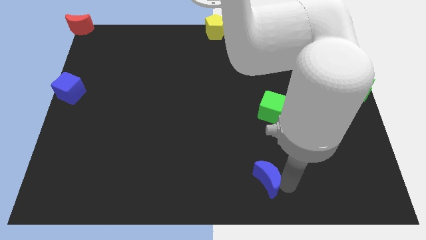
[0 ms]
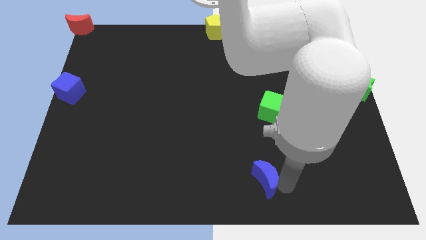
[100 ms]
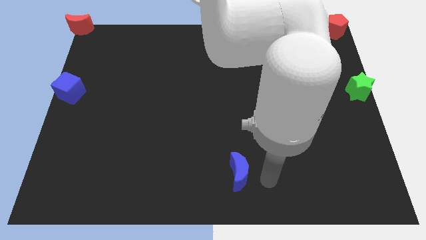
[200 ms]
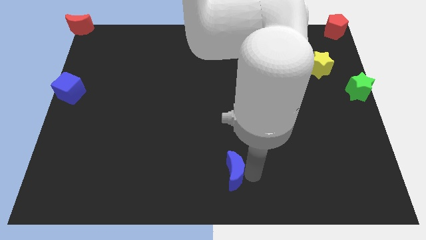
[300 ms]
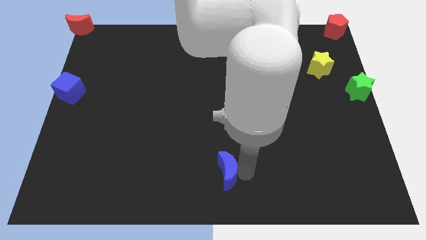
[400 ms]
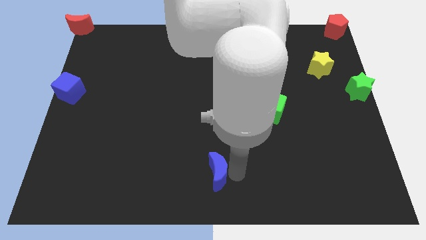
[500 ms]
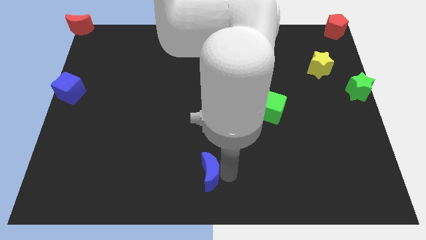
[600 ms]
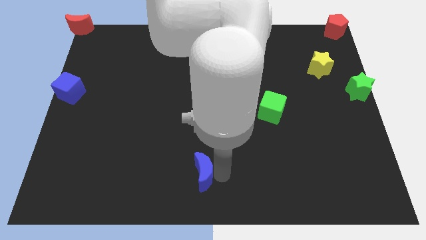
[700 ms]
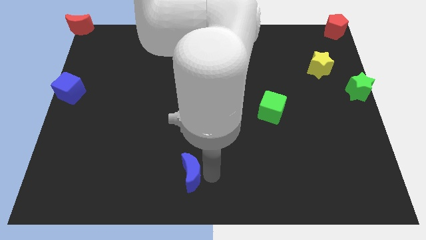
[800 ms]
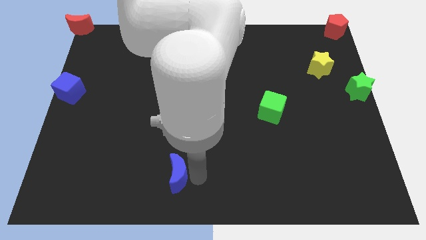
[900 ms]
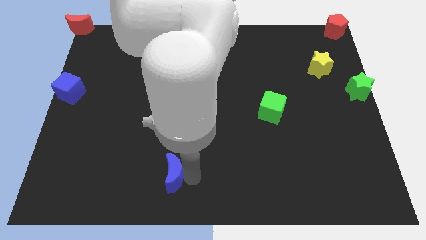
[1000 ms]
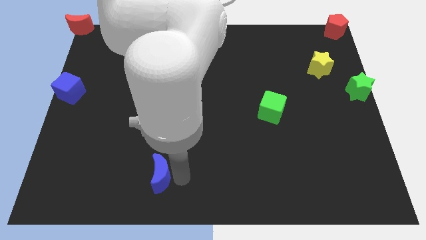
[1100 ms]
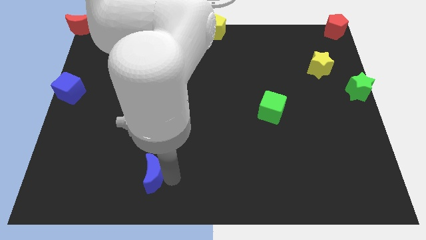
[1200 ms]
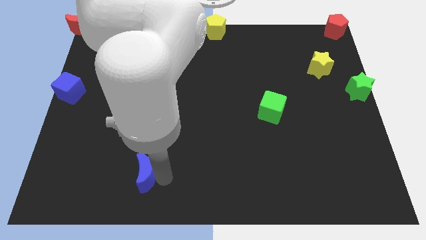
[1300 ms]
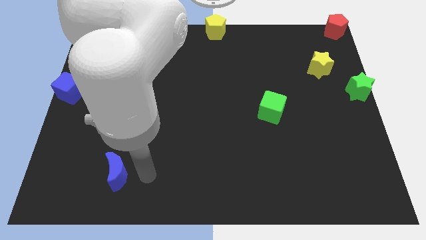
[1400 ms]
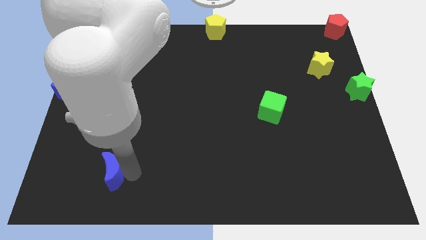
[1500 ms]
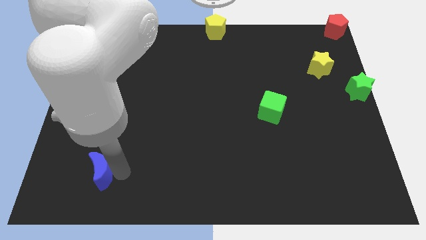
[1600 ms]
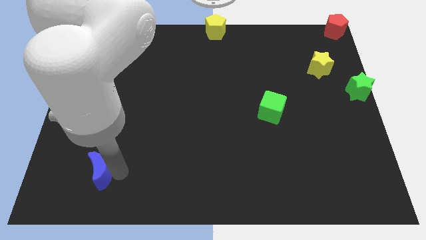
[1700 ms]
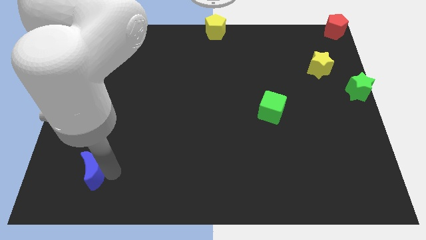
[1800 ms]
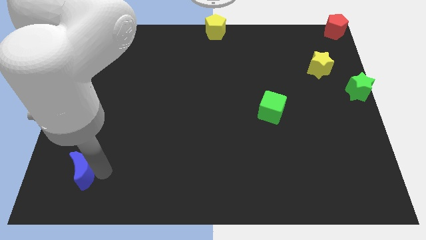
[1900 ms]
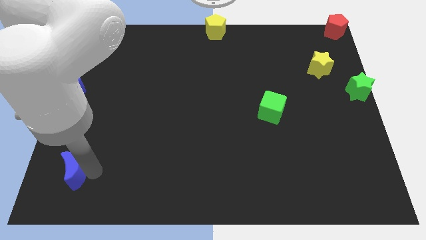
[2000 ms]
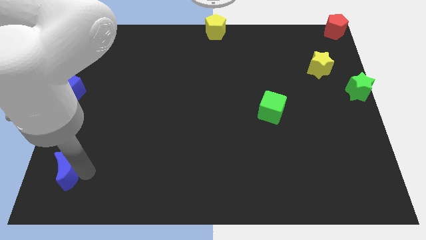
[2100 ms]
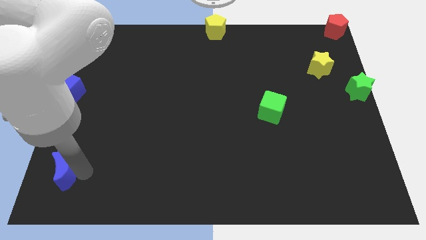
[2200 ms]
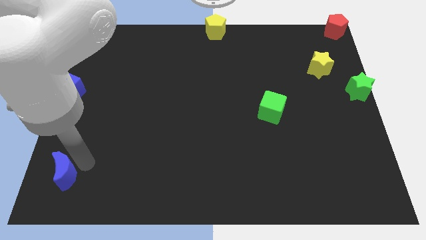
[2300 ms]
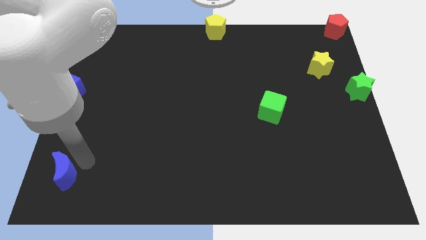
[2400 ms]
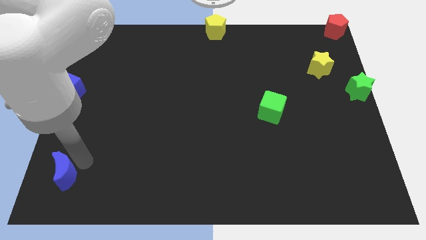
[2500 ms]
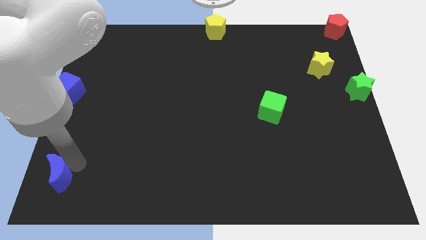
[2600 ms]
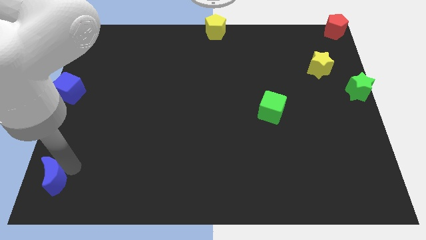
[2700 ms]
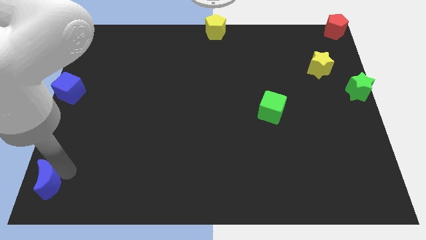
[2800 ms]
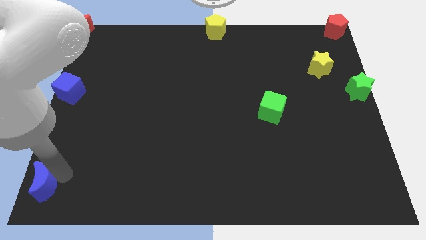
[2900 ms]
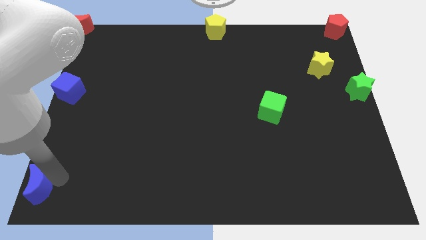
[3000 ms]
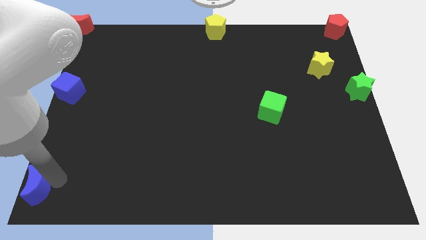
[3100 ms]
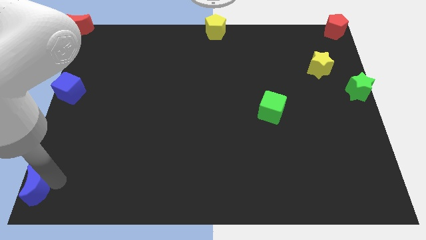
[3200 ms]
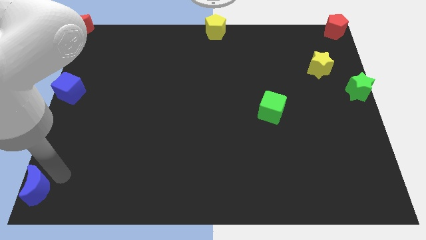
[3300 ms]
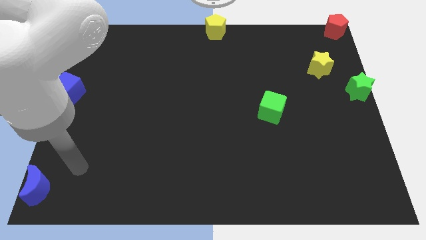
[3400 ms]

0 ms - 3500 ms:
move blue crescent towards the bottom left corner of the board

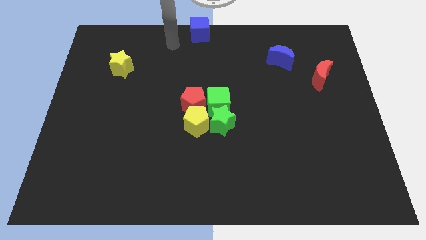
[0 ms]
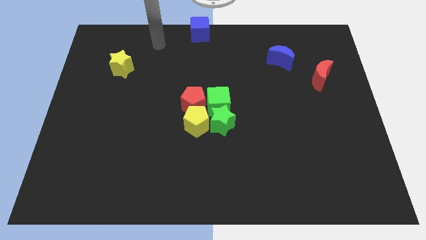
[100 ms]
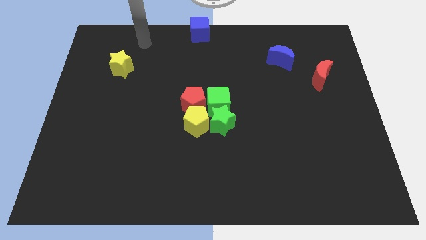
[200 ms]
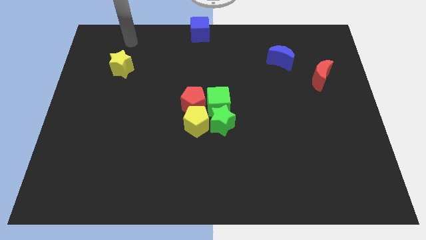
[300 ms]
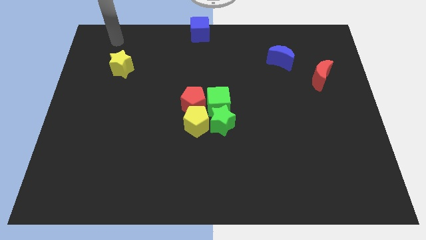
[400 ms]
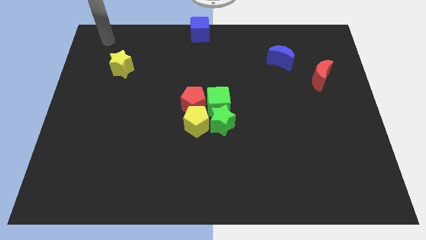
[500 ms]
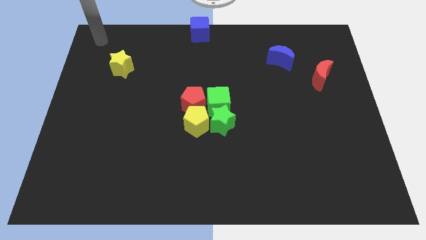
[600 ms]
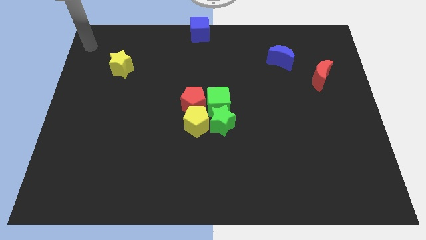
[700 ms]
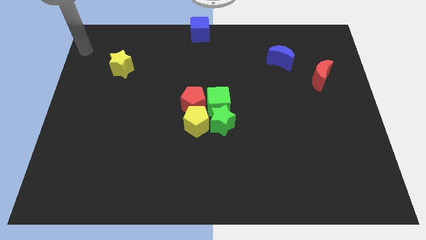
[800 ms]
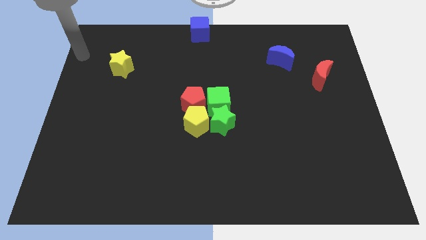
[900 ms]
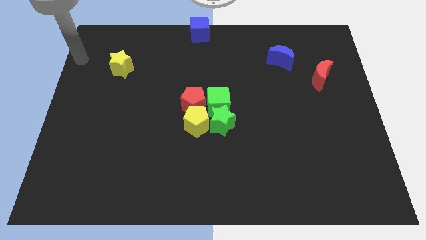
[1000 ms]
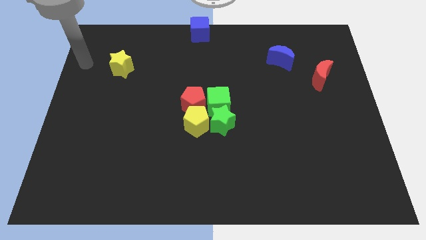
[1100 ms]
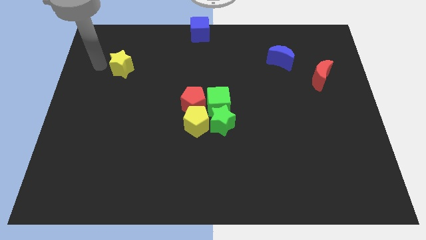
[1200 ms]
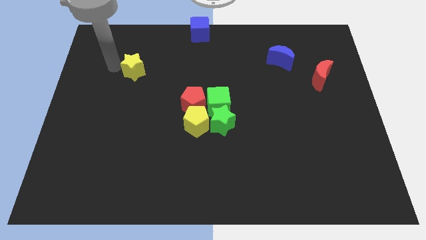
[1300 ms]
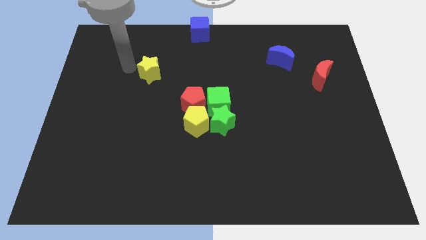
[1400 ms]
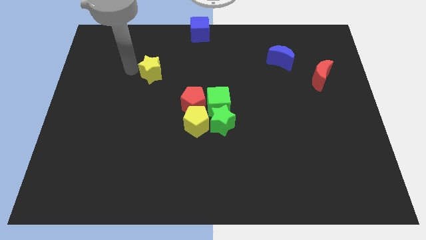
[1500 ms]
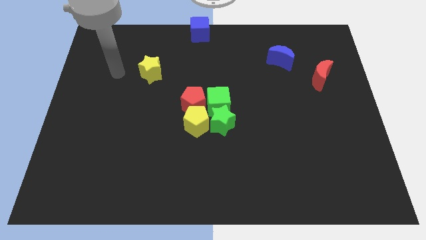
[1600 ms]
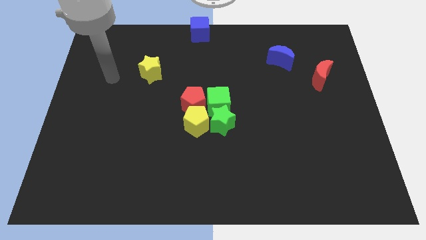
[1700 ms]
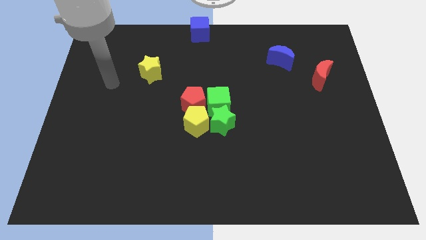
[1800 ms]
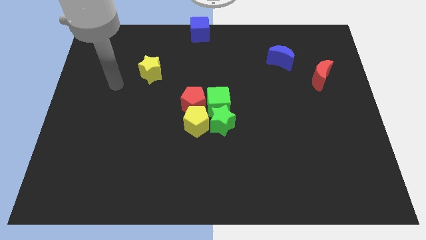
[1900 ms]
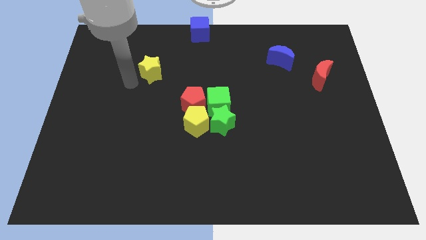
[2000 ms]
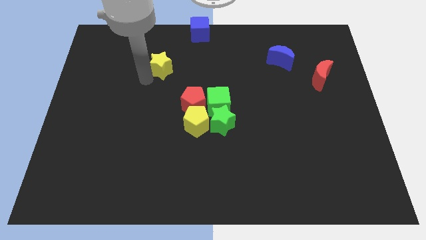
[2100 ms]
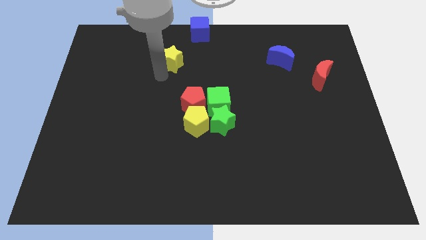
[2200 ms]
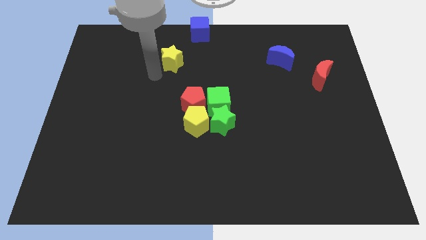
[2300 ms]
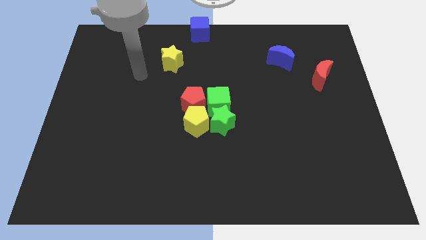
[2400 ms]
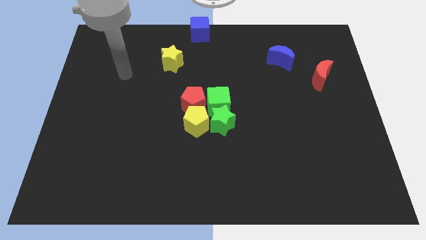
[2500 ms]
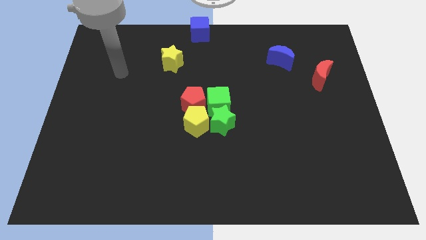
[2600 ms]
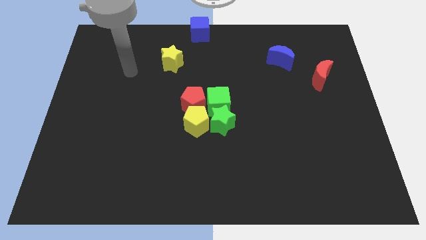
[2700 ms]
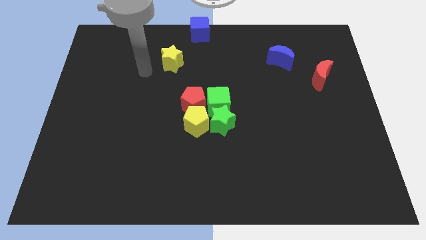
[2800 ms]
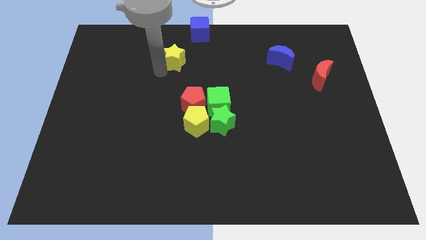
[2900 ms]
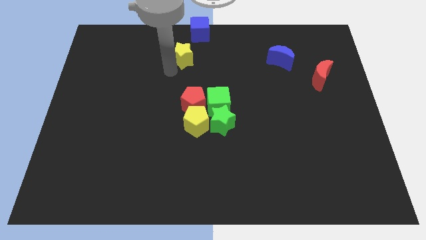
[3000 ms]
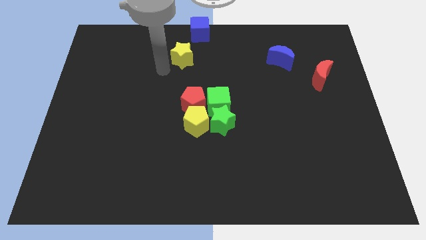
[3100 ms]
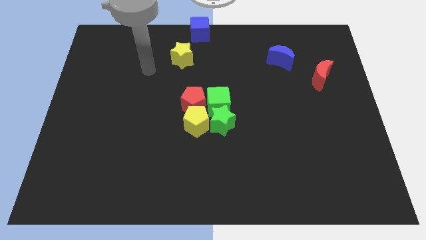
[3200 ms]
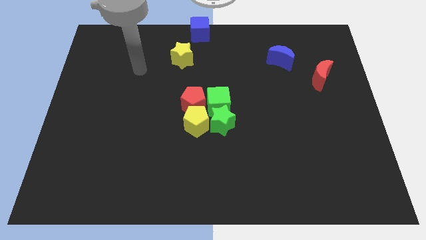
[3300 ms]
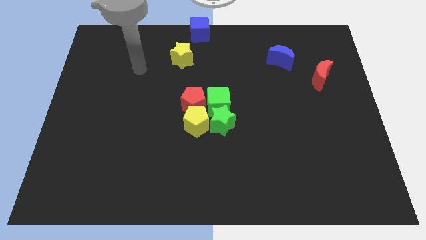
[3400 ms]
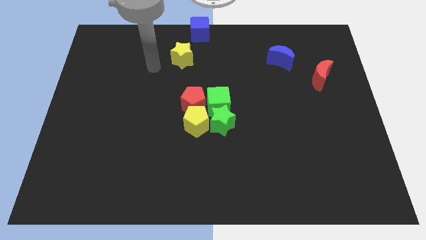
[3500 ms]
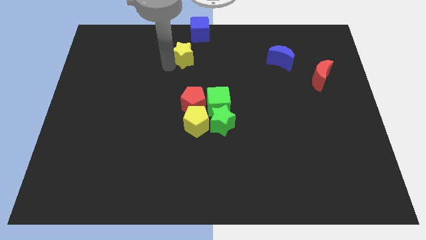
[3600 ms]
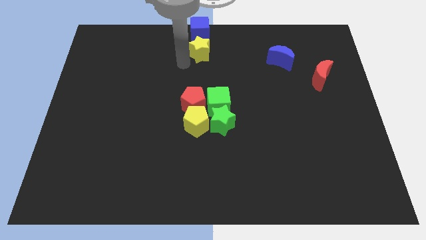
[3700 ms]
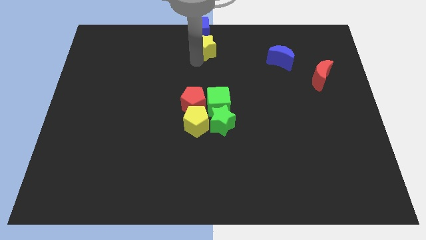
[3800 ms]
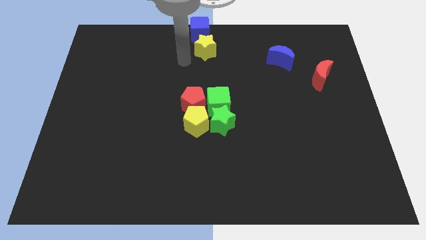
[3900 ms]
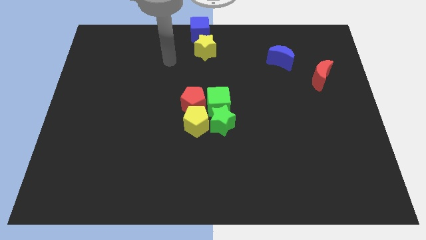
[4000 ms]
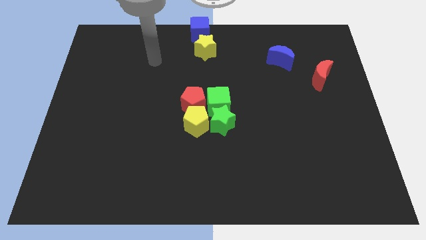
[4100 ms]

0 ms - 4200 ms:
place the yellow star below the blue cube

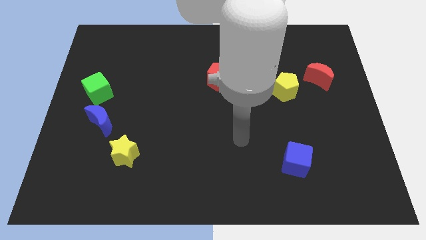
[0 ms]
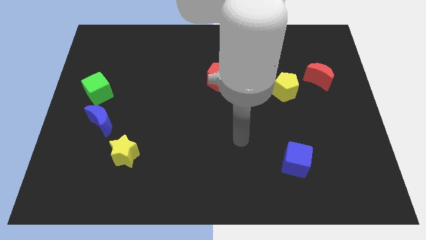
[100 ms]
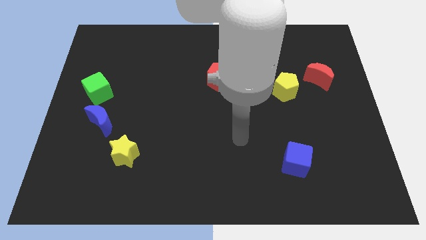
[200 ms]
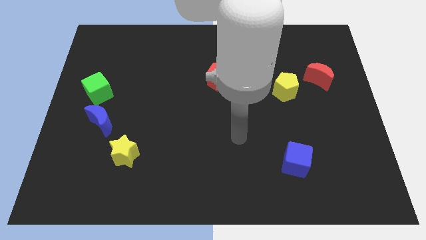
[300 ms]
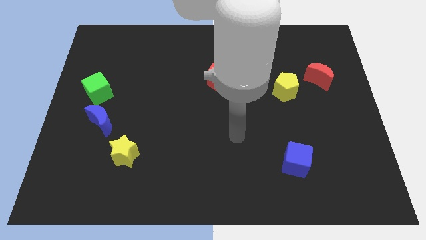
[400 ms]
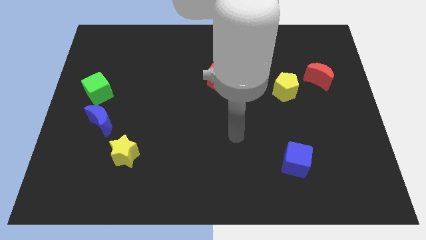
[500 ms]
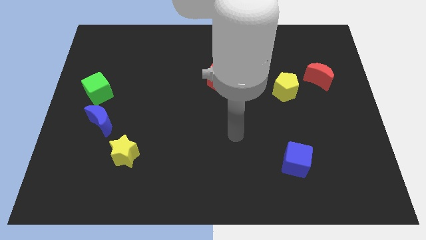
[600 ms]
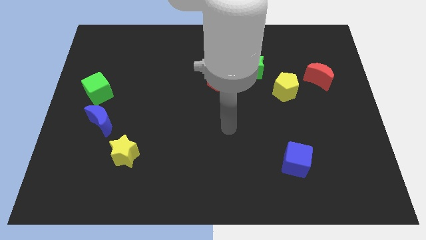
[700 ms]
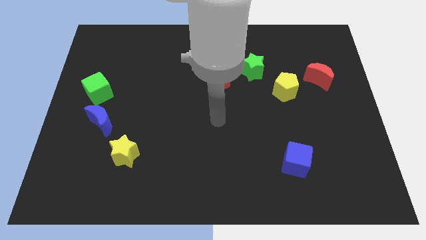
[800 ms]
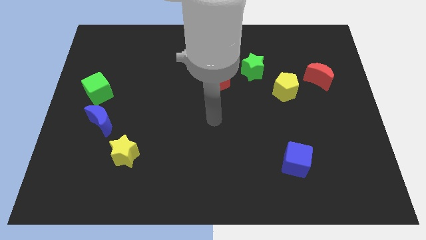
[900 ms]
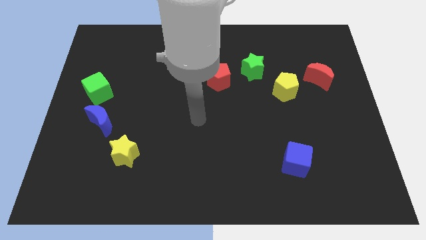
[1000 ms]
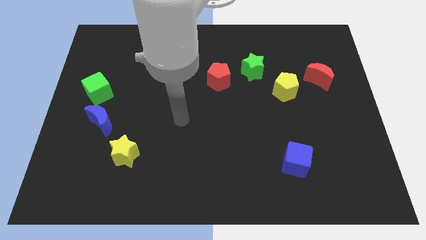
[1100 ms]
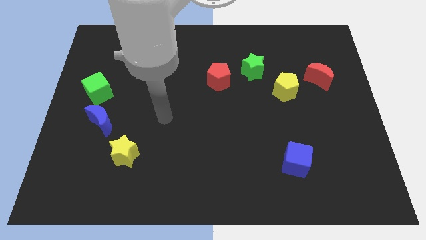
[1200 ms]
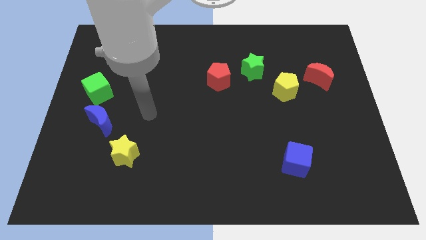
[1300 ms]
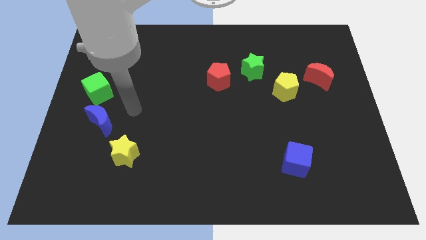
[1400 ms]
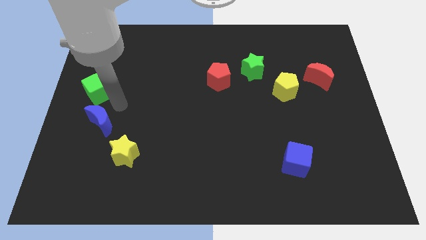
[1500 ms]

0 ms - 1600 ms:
place your arm vertically above the yellow star
